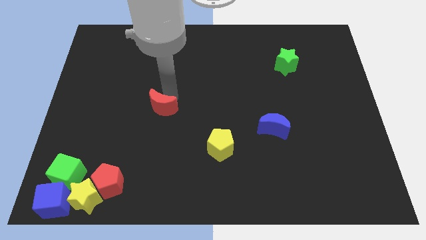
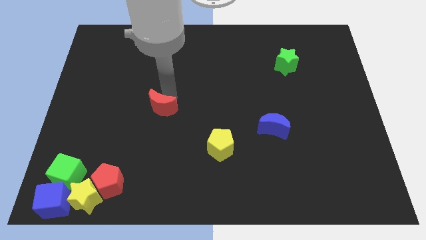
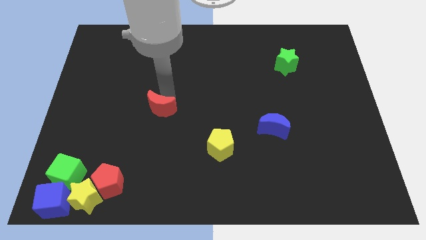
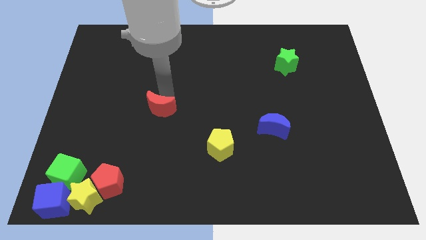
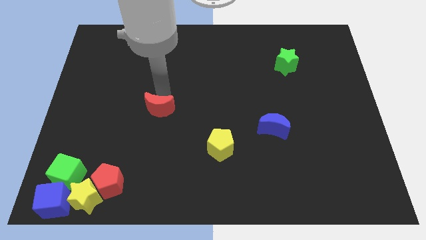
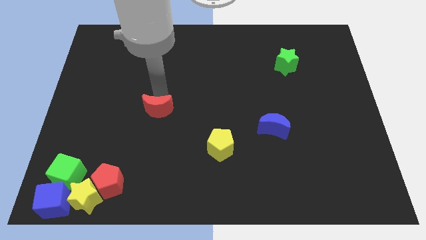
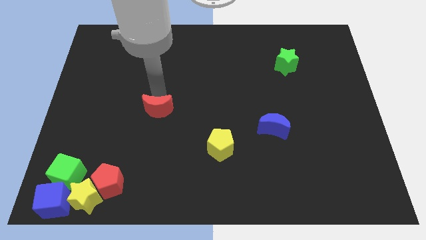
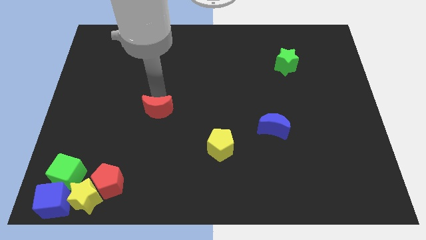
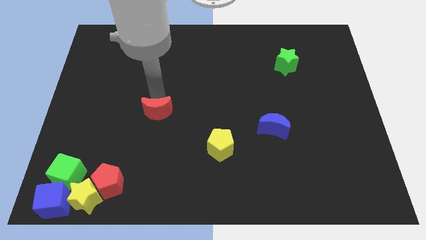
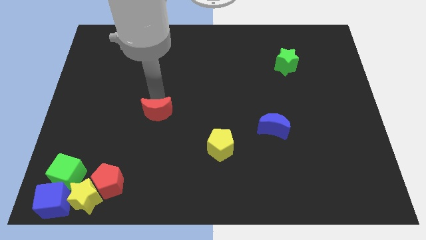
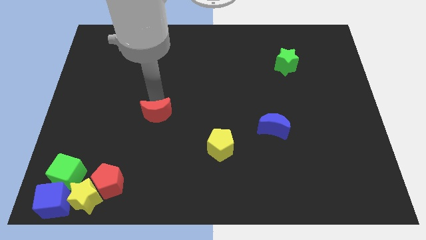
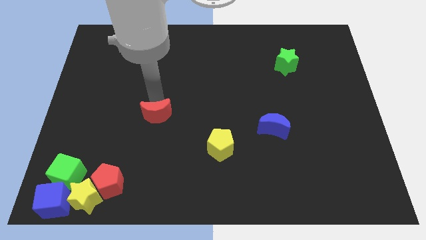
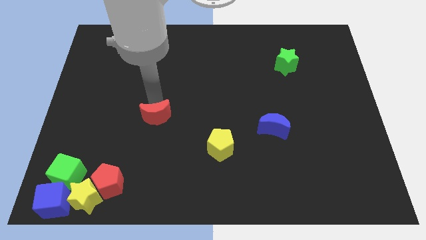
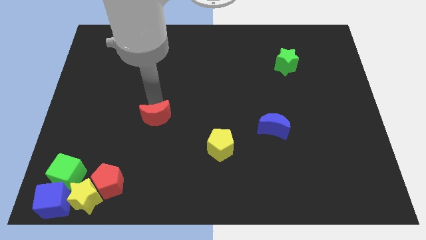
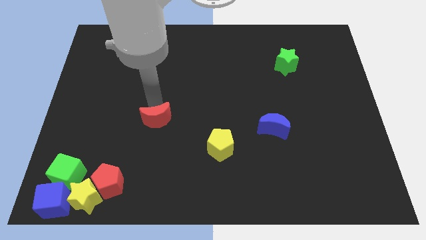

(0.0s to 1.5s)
push the red crescent slightly to the bottom of the board

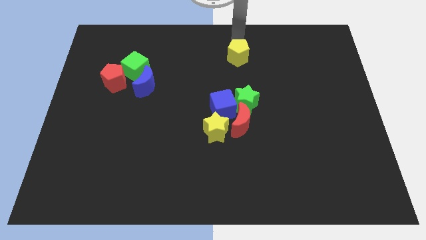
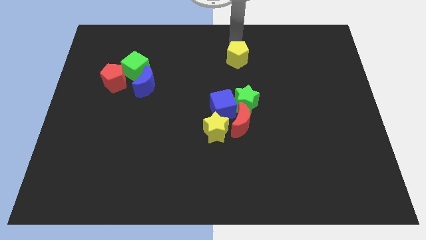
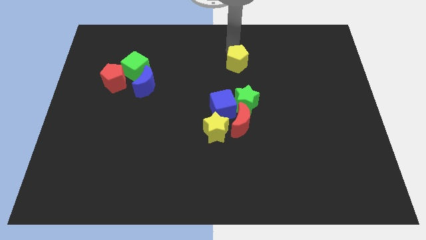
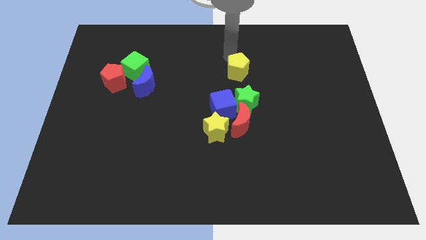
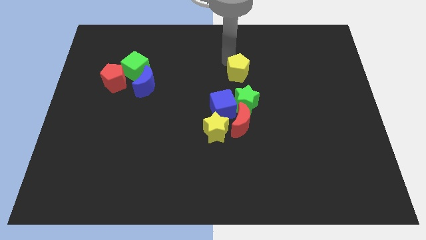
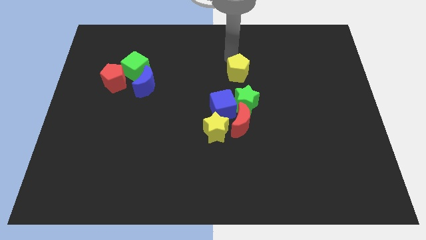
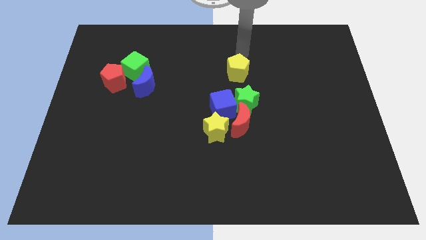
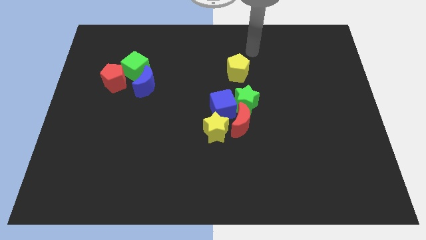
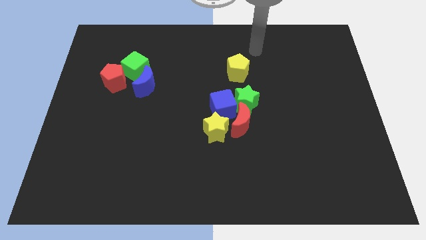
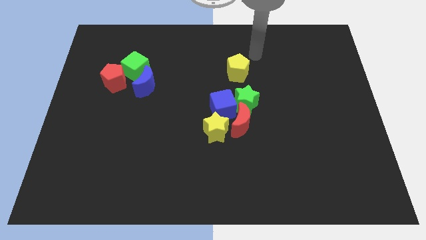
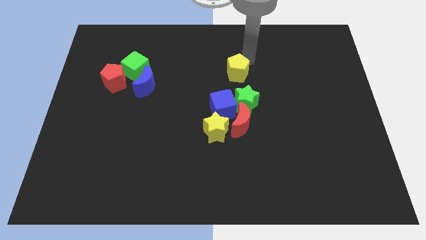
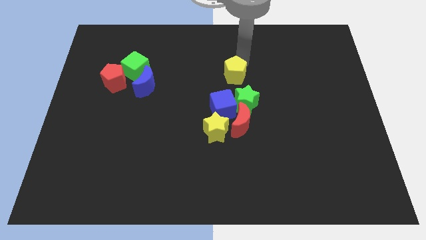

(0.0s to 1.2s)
drag the yellow pentagon slightly downwards

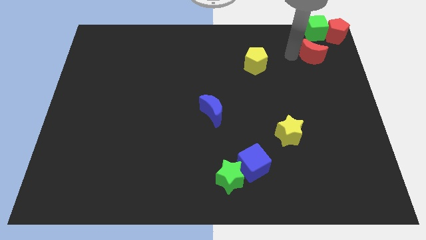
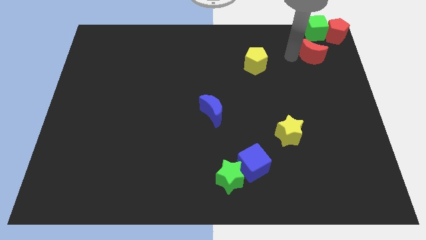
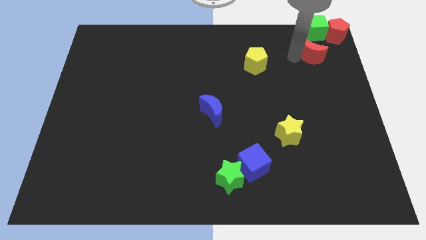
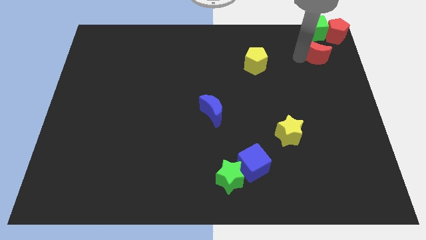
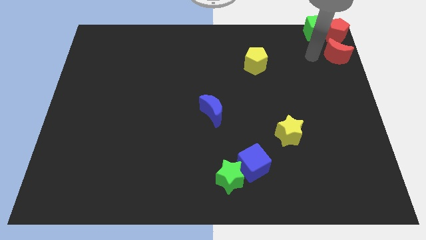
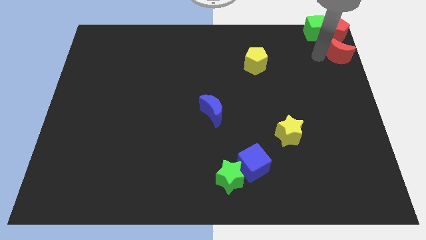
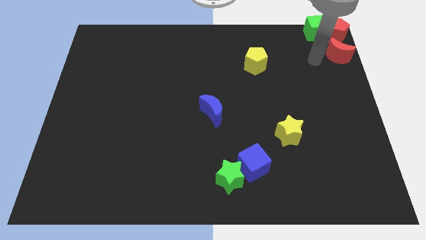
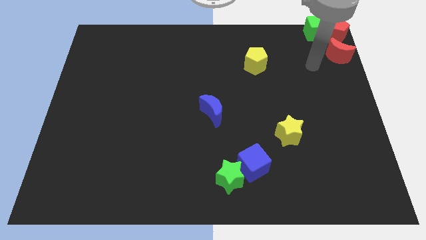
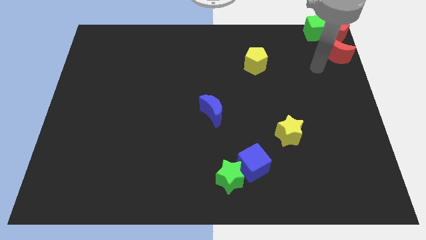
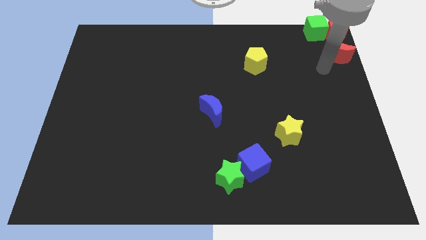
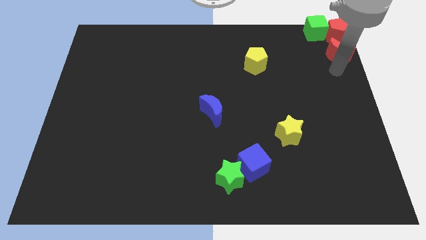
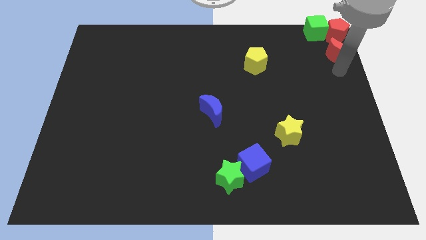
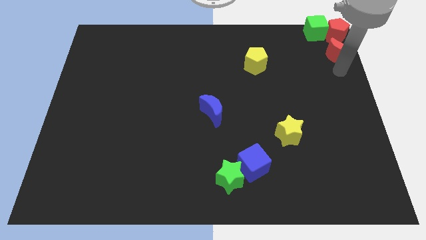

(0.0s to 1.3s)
put the red moon below the red pentagon

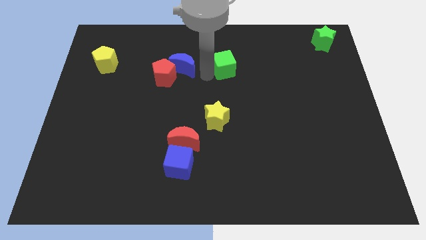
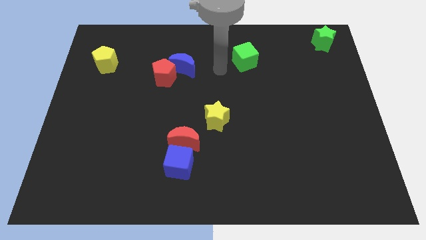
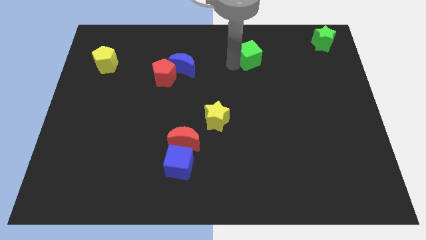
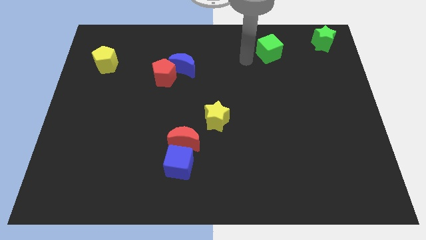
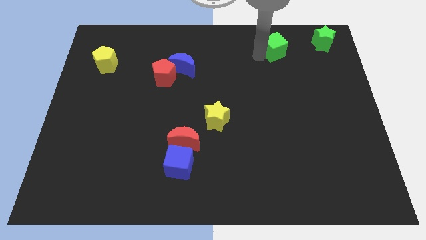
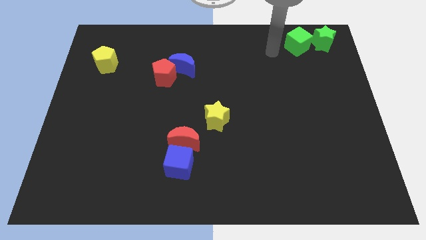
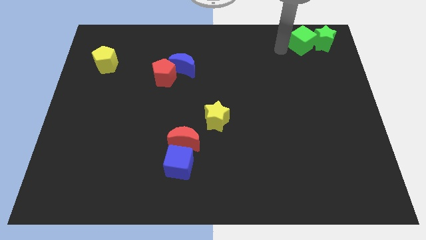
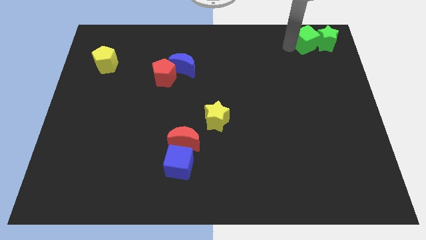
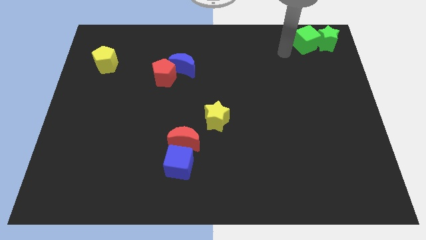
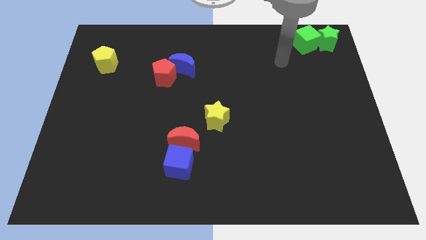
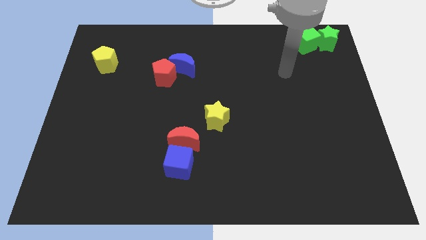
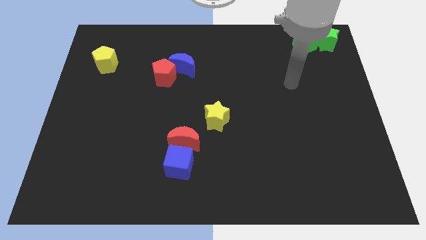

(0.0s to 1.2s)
move the green cube left to the green star

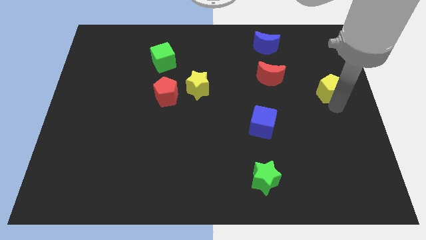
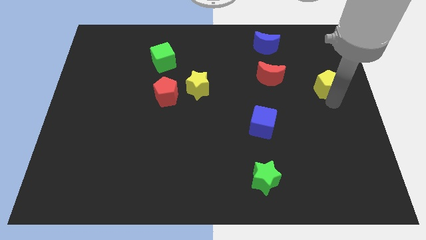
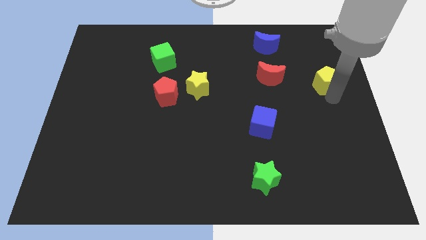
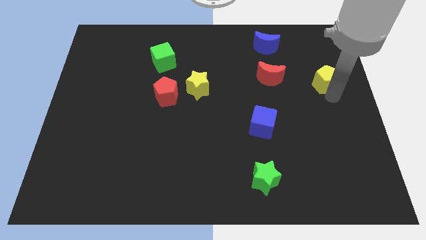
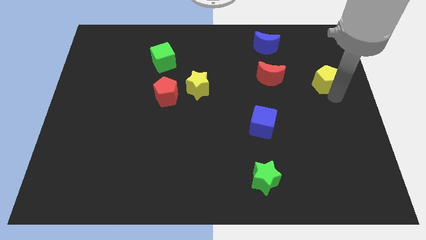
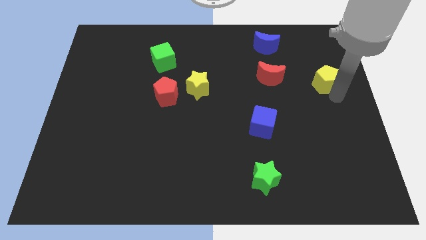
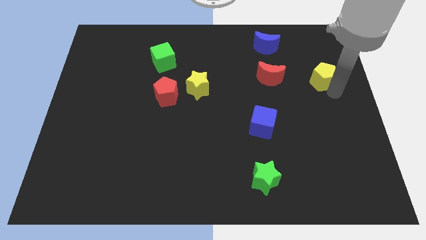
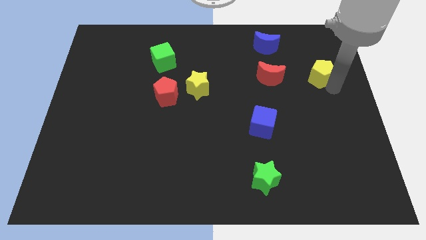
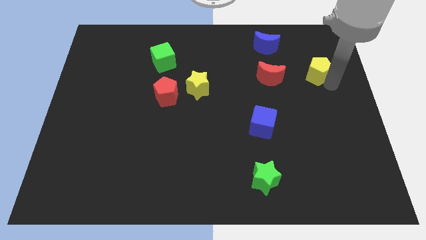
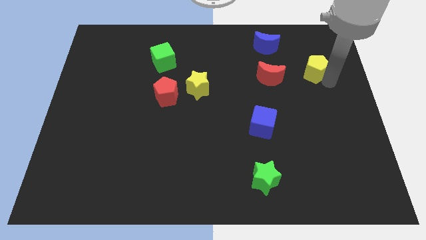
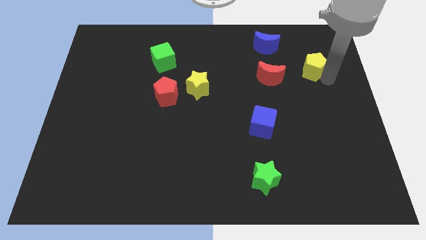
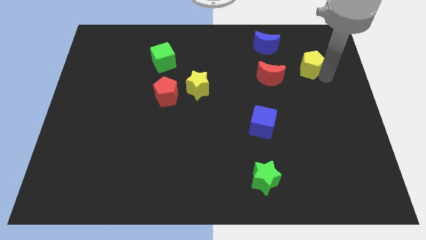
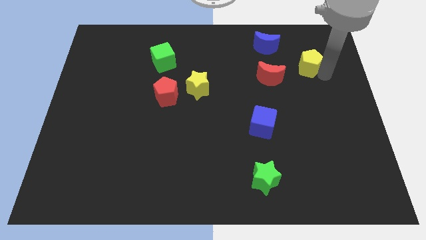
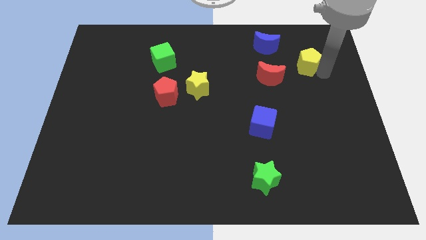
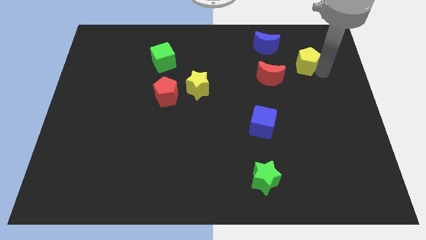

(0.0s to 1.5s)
place the yellow pentagon right of red crescent

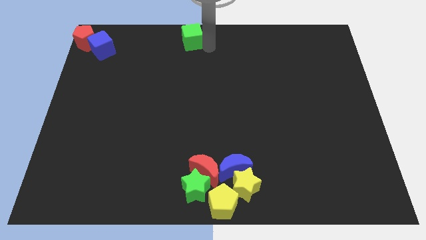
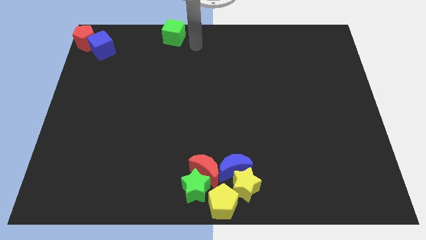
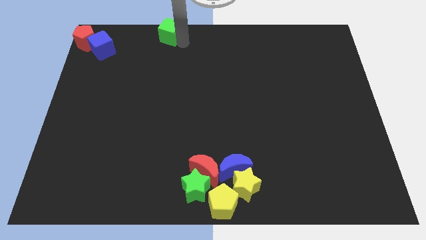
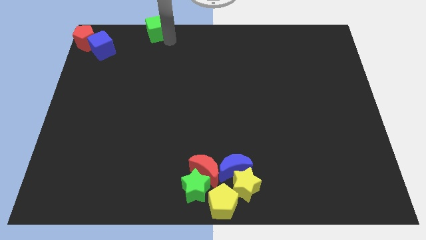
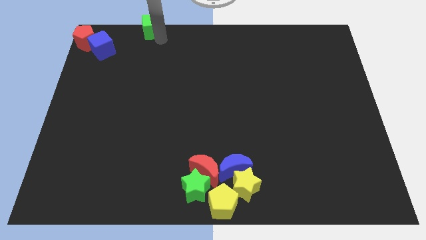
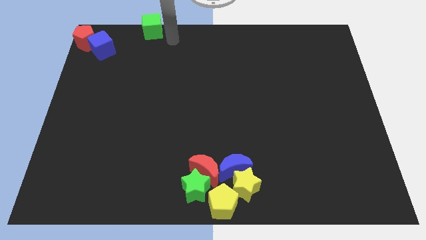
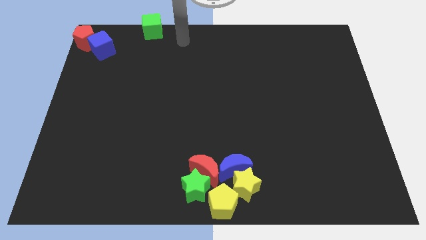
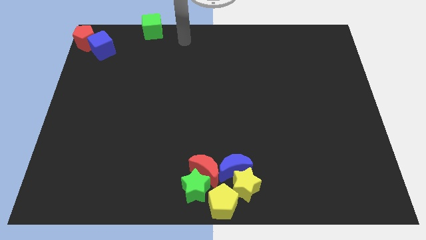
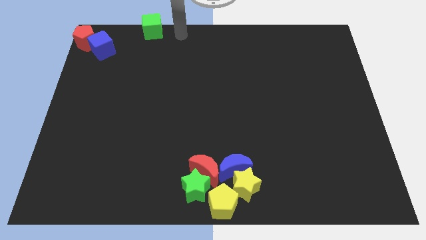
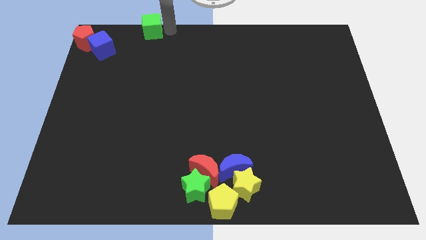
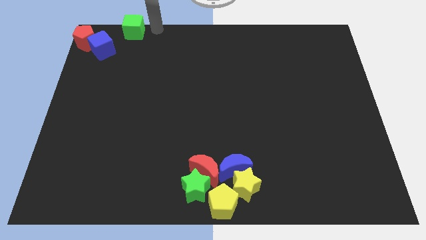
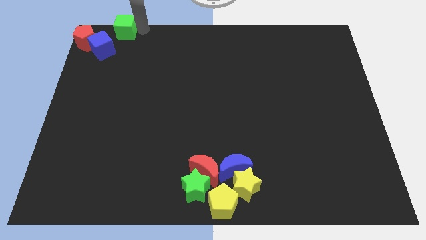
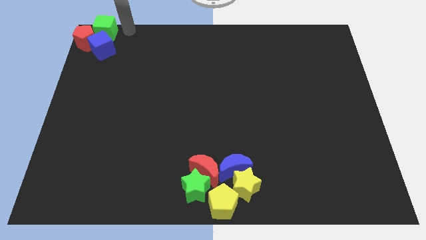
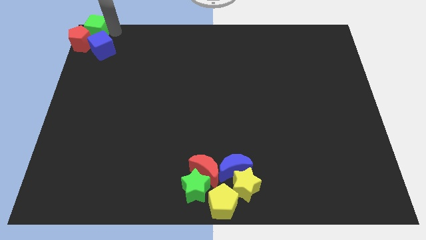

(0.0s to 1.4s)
place the green cube to the right side of the red pentagon

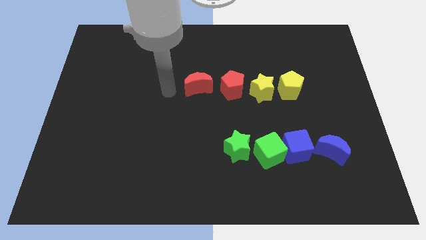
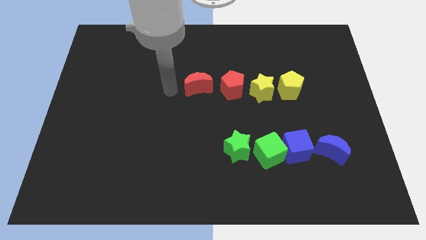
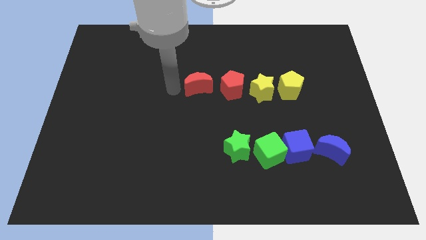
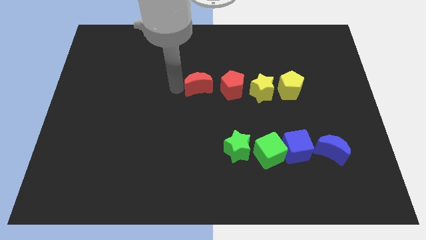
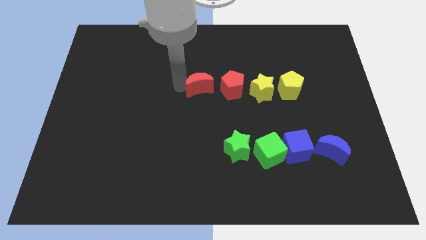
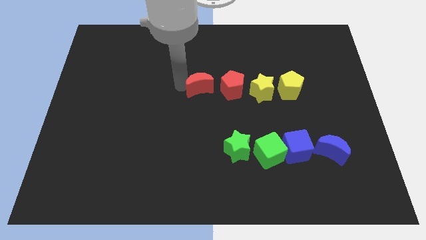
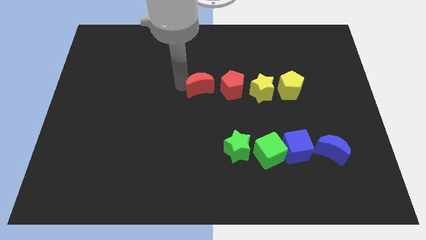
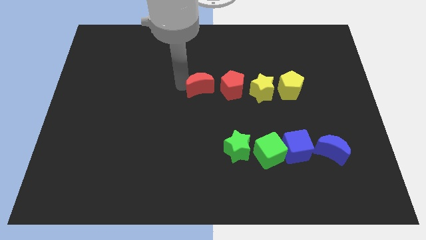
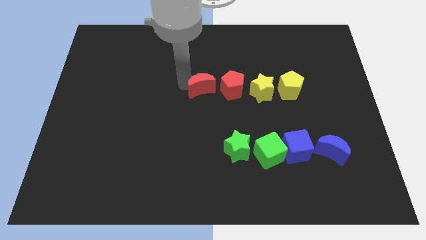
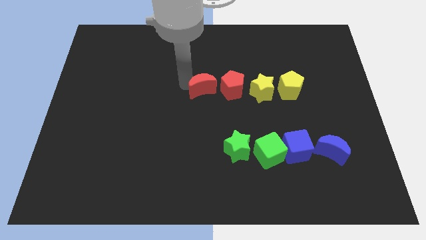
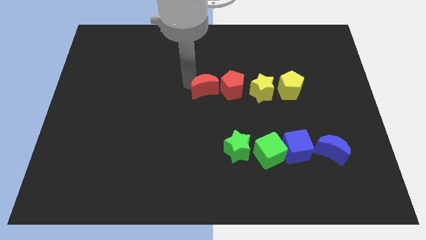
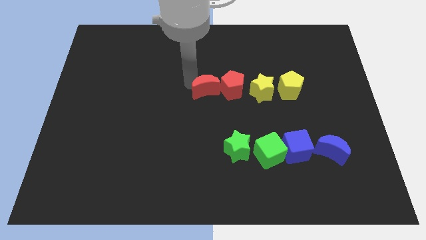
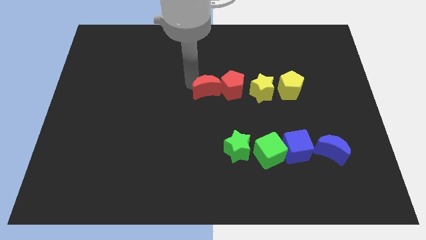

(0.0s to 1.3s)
push the red crescent into the red pentagon
